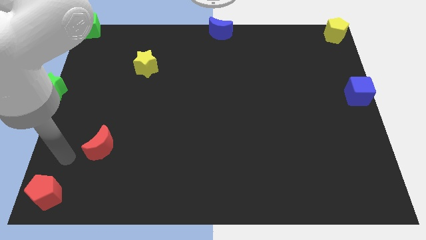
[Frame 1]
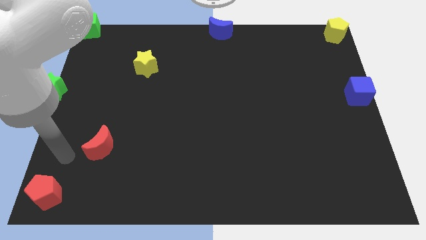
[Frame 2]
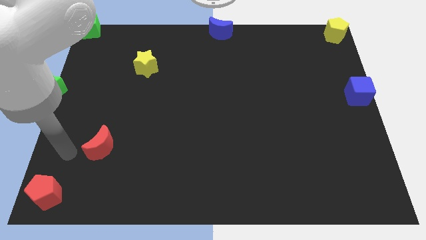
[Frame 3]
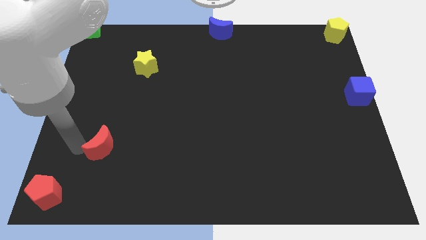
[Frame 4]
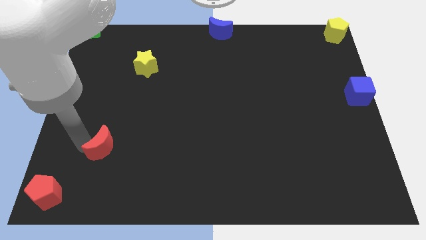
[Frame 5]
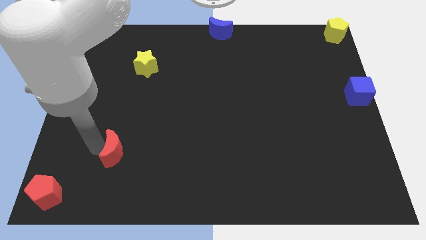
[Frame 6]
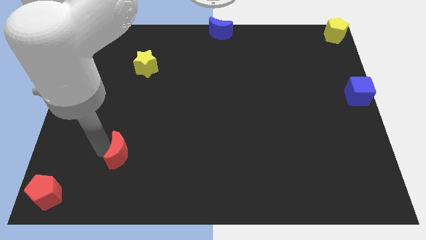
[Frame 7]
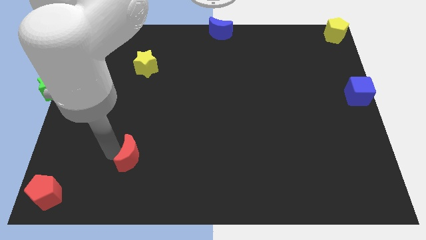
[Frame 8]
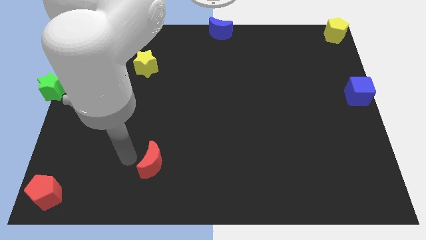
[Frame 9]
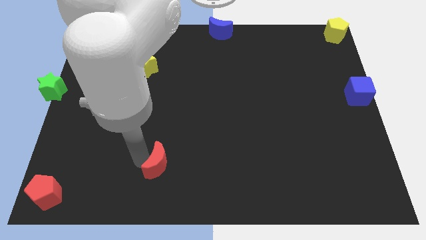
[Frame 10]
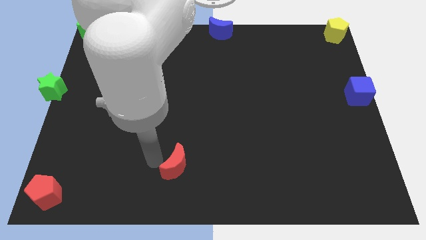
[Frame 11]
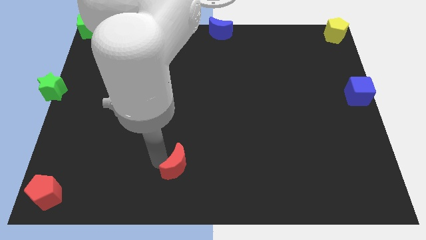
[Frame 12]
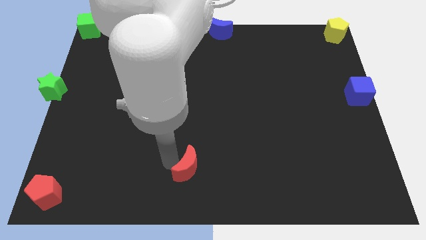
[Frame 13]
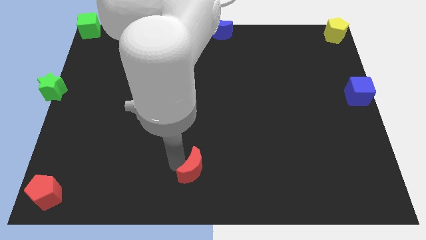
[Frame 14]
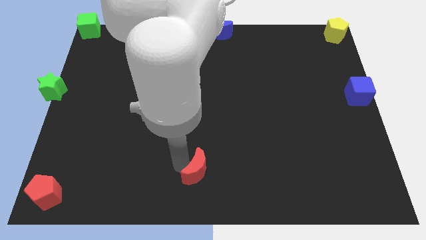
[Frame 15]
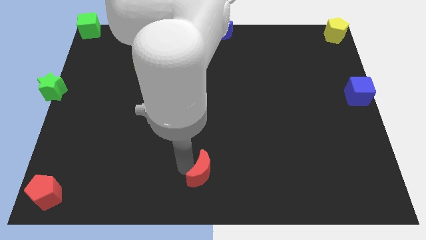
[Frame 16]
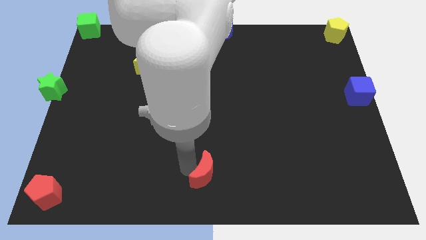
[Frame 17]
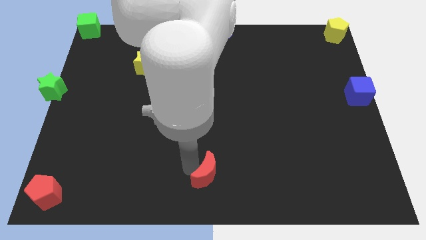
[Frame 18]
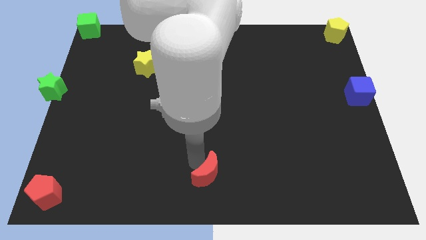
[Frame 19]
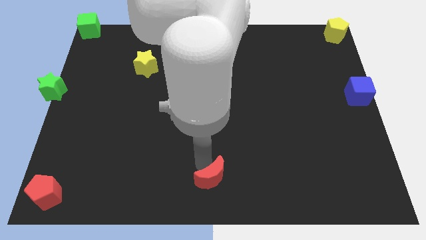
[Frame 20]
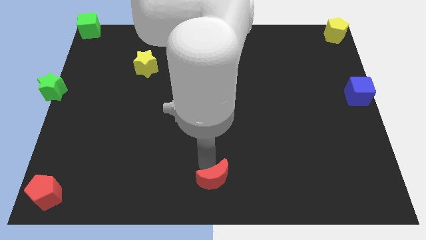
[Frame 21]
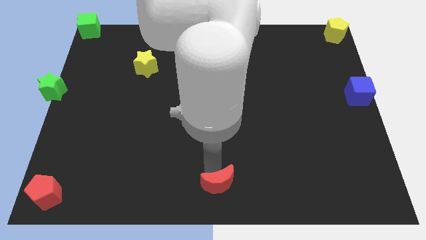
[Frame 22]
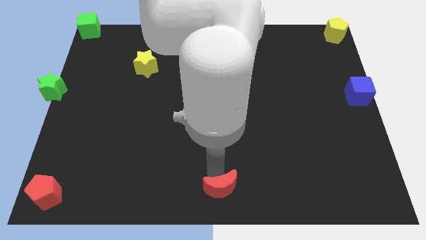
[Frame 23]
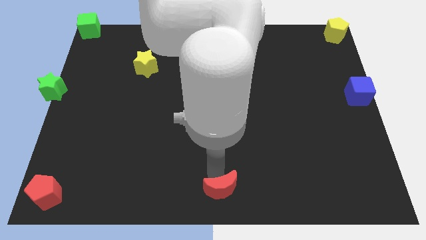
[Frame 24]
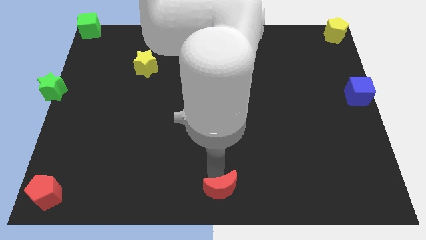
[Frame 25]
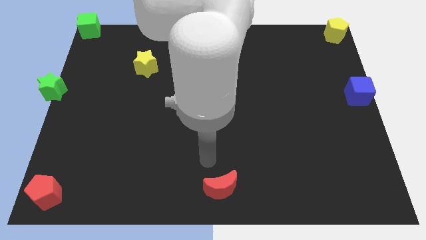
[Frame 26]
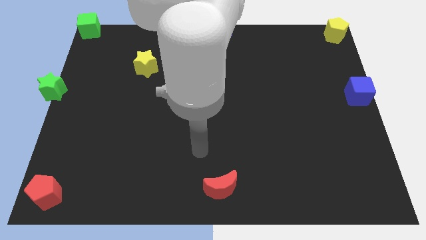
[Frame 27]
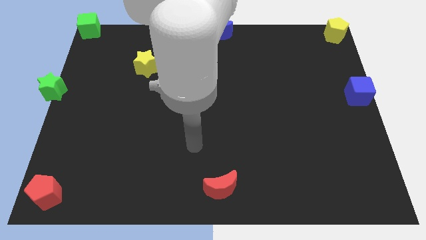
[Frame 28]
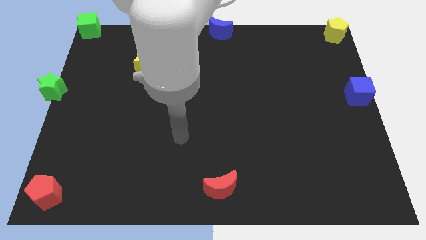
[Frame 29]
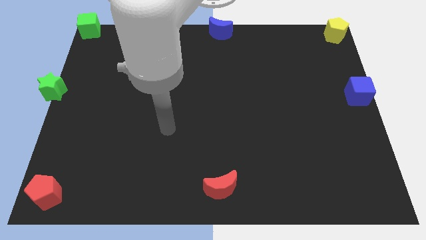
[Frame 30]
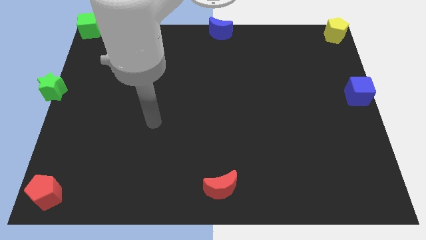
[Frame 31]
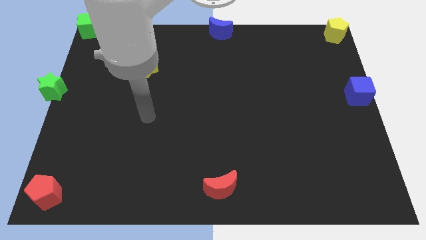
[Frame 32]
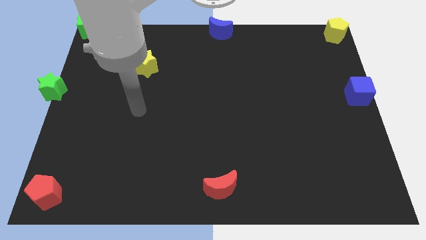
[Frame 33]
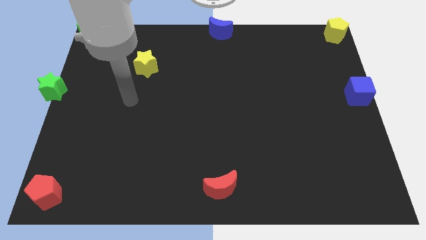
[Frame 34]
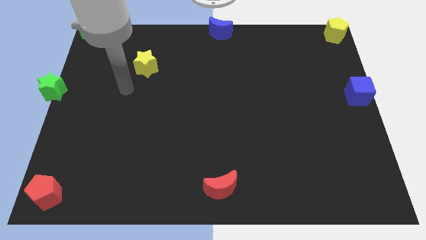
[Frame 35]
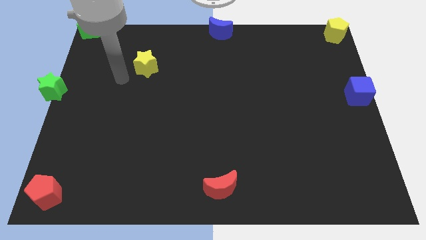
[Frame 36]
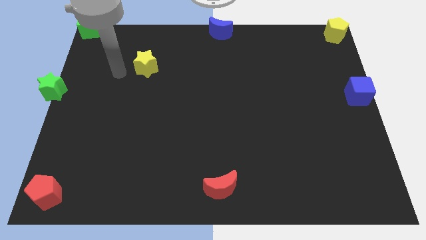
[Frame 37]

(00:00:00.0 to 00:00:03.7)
push the red moon diagonally bottom right to the yellow star

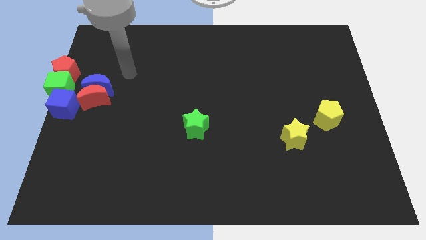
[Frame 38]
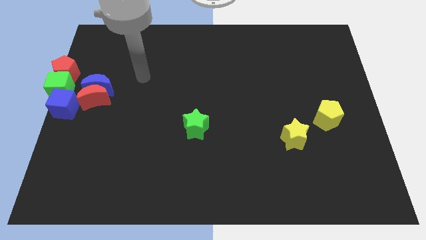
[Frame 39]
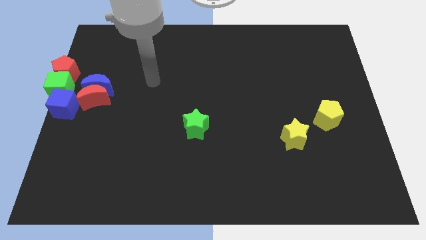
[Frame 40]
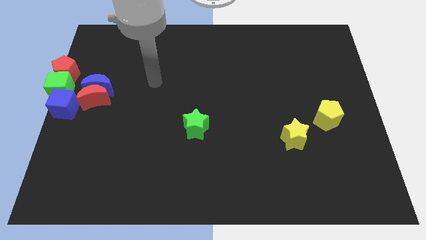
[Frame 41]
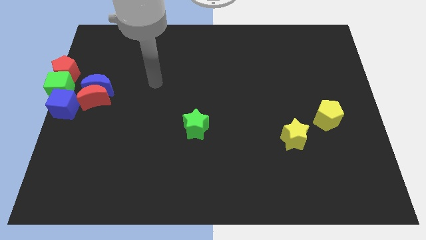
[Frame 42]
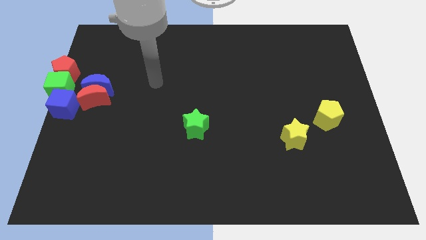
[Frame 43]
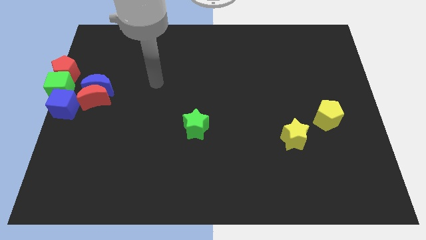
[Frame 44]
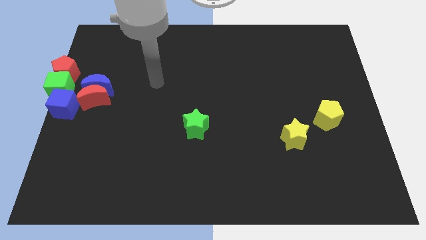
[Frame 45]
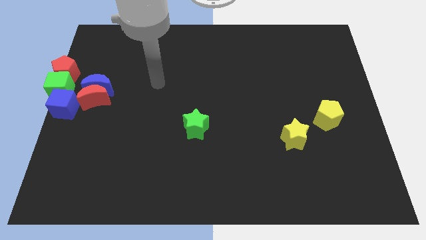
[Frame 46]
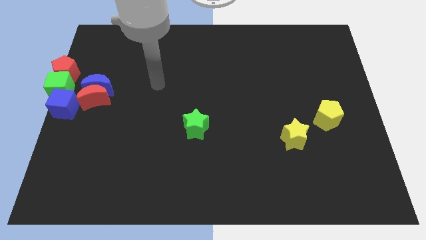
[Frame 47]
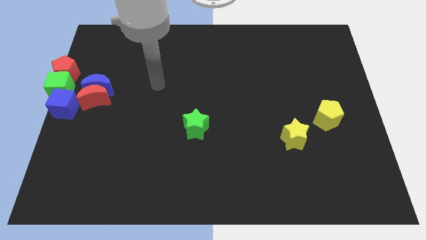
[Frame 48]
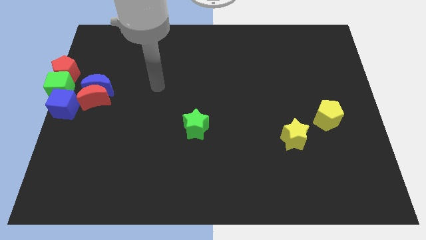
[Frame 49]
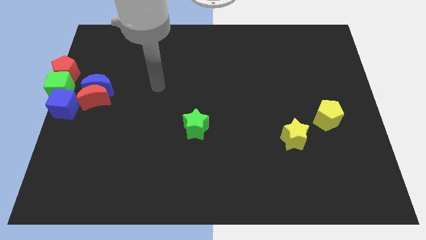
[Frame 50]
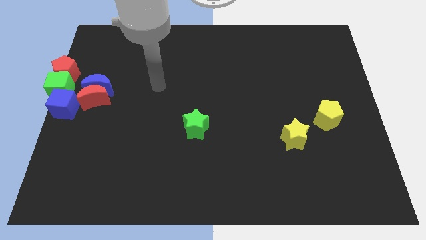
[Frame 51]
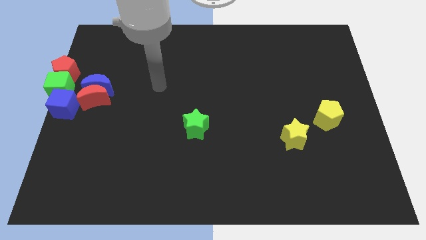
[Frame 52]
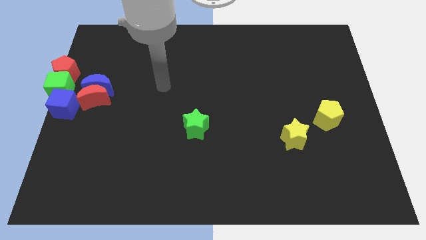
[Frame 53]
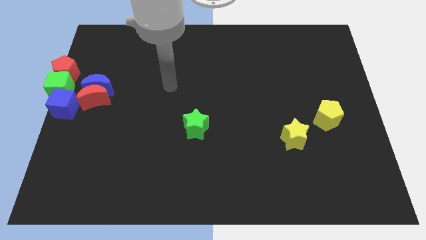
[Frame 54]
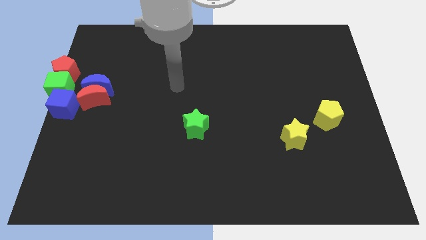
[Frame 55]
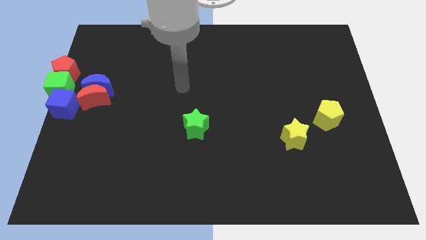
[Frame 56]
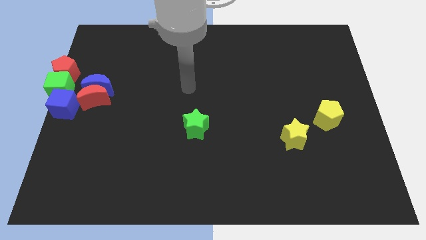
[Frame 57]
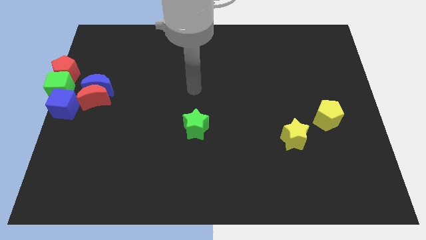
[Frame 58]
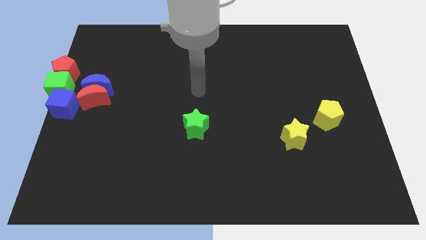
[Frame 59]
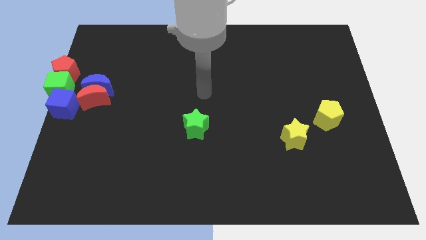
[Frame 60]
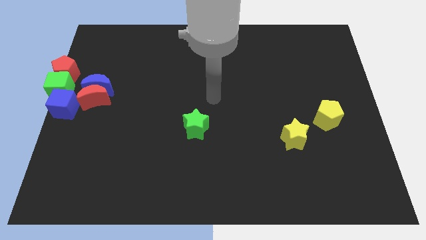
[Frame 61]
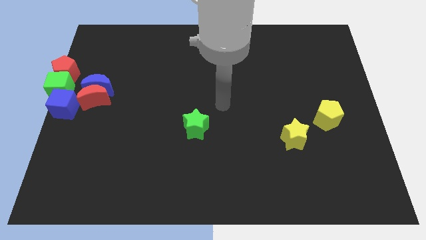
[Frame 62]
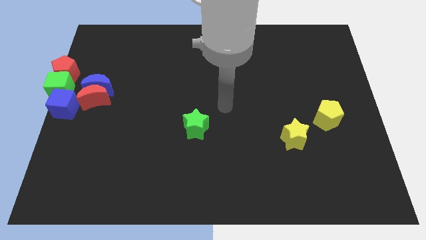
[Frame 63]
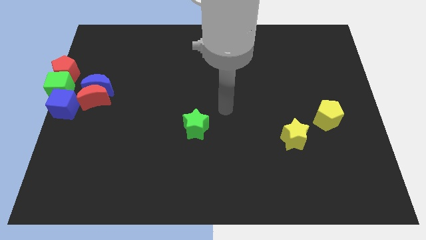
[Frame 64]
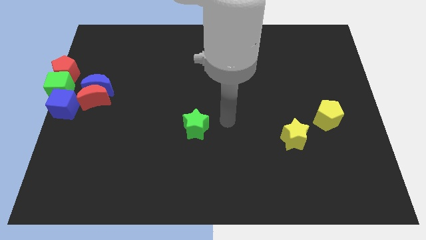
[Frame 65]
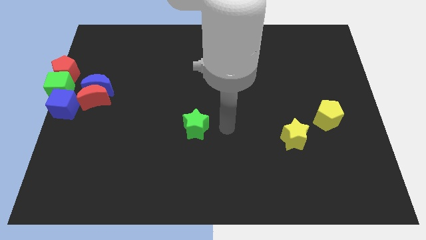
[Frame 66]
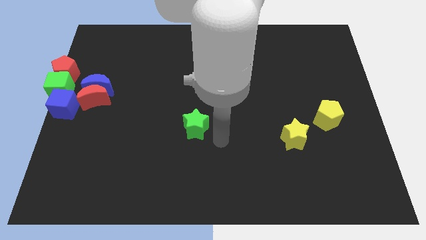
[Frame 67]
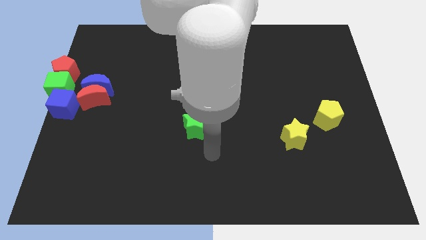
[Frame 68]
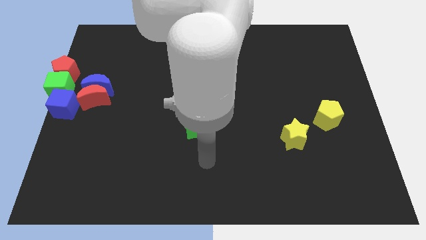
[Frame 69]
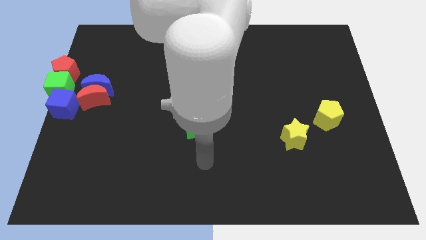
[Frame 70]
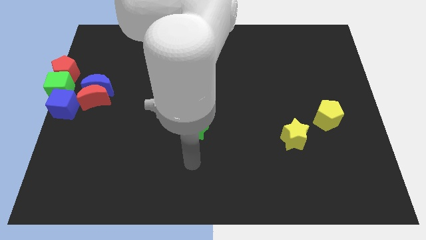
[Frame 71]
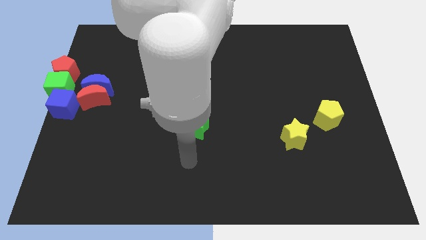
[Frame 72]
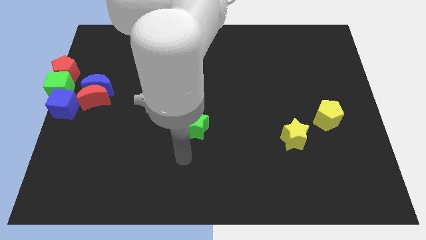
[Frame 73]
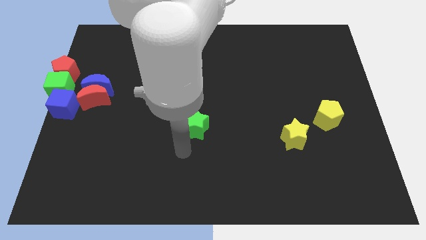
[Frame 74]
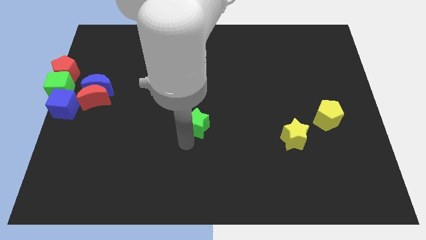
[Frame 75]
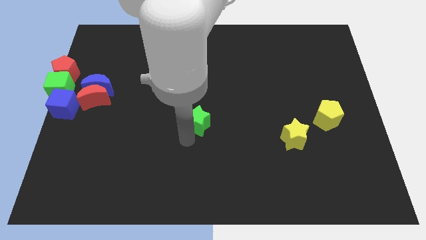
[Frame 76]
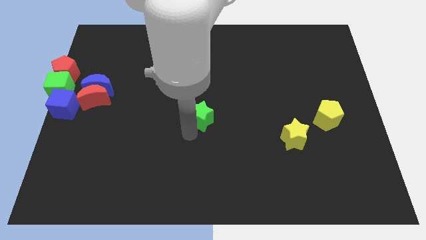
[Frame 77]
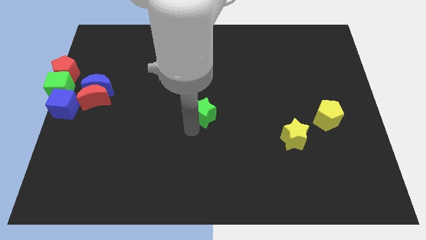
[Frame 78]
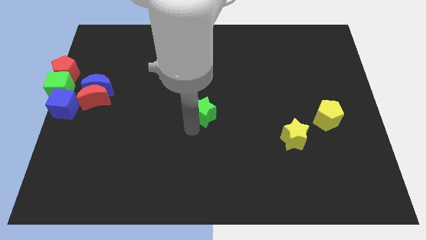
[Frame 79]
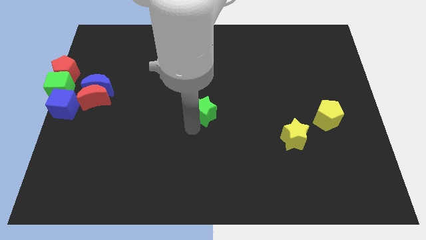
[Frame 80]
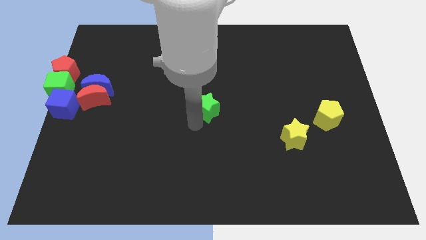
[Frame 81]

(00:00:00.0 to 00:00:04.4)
move the green star to the center of the board

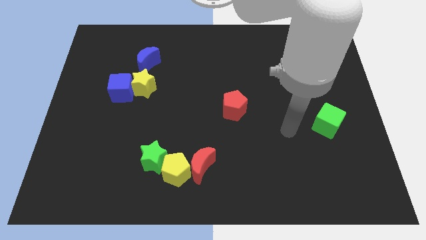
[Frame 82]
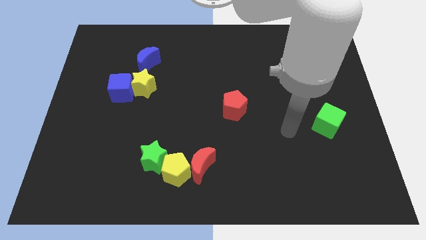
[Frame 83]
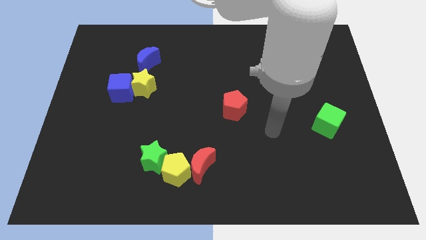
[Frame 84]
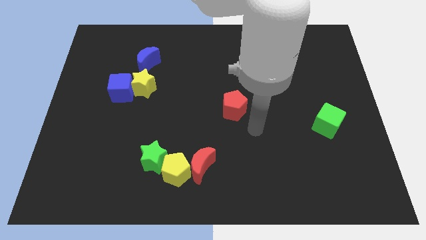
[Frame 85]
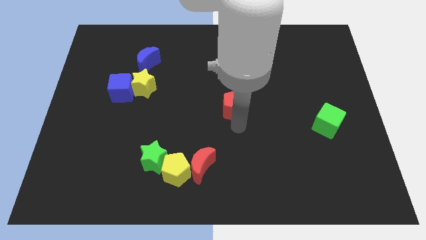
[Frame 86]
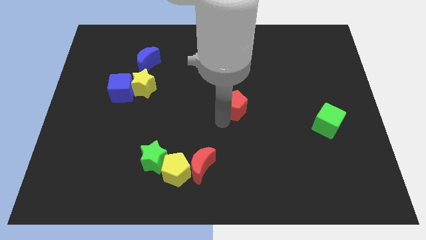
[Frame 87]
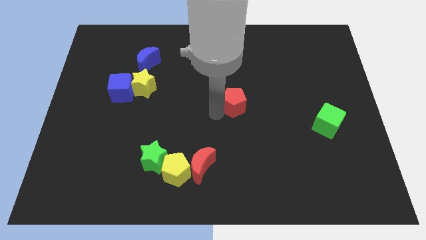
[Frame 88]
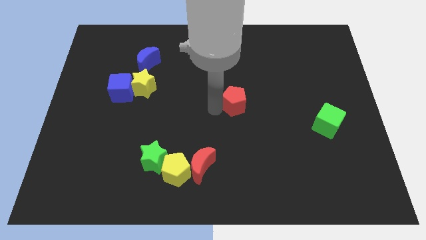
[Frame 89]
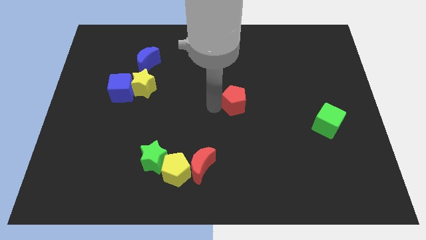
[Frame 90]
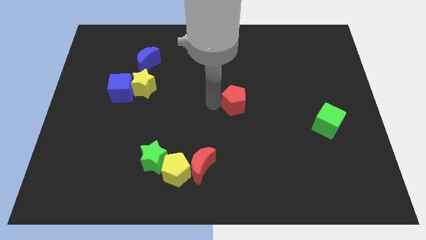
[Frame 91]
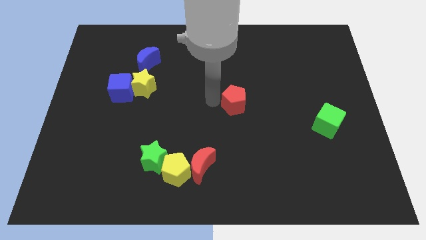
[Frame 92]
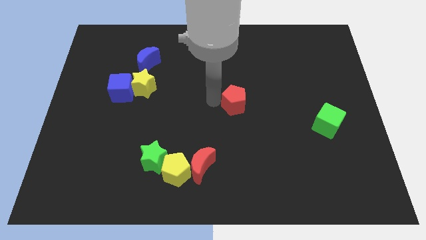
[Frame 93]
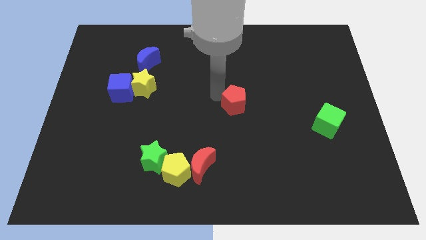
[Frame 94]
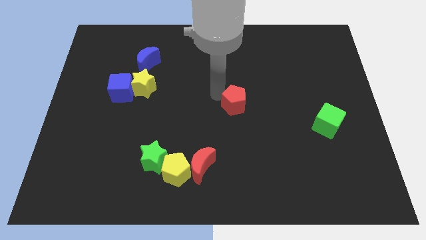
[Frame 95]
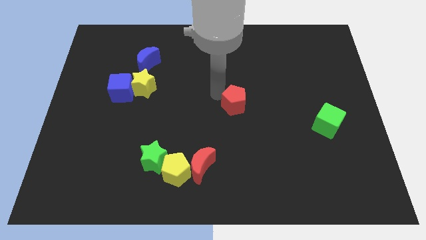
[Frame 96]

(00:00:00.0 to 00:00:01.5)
move red pentagon slightly away from the centre of the board
